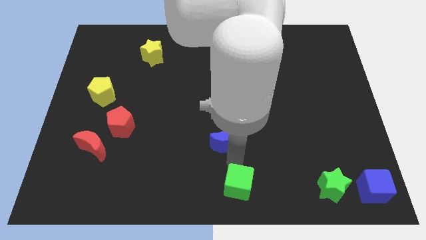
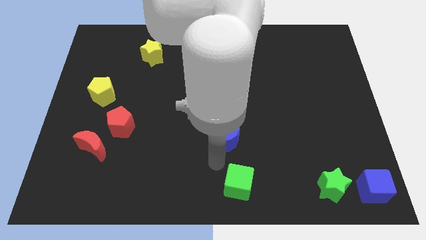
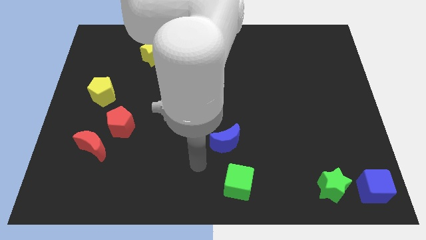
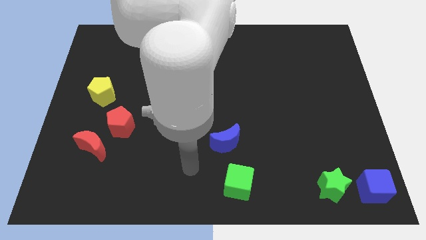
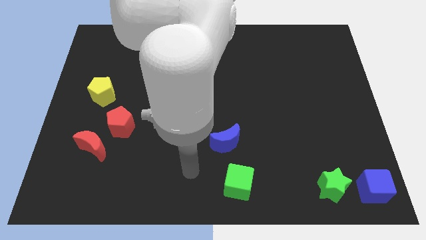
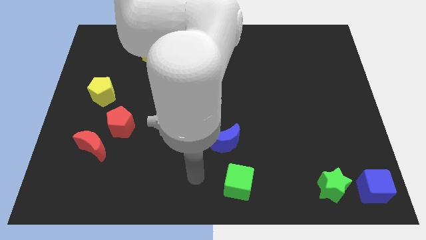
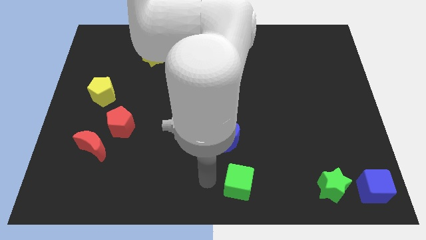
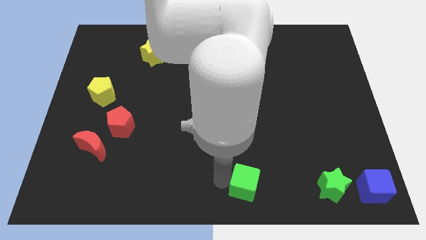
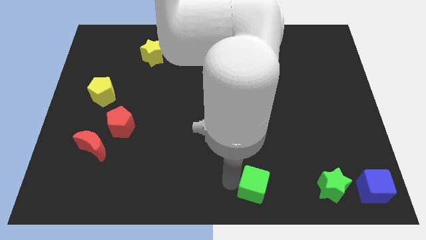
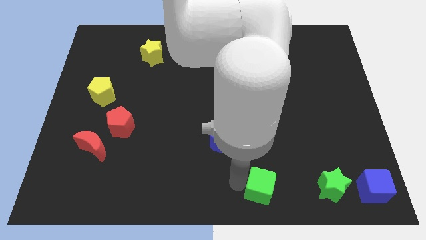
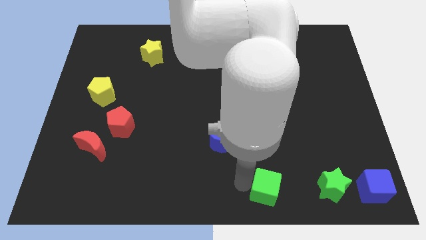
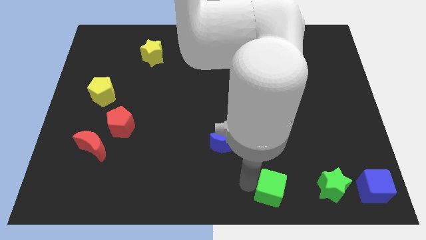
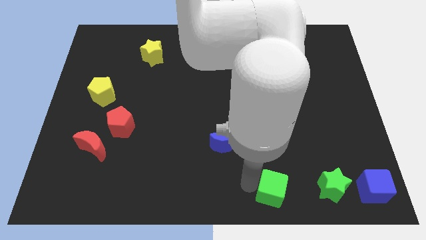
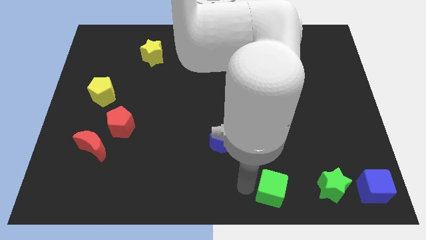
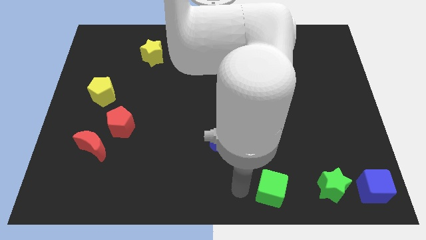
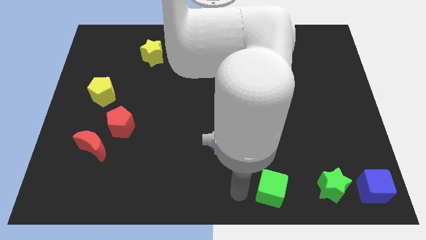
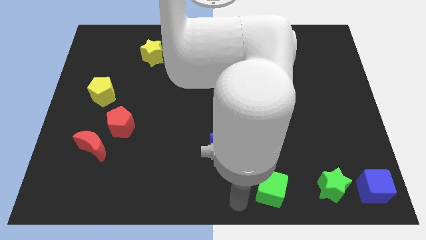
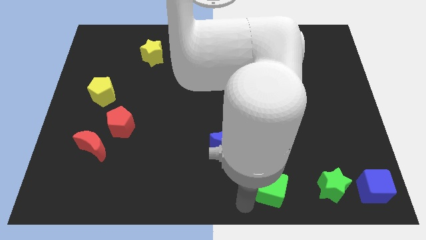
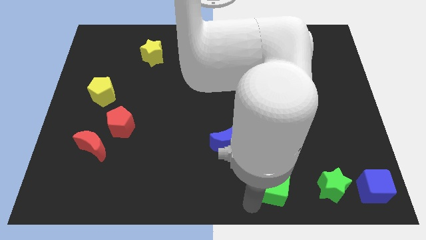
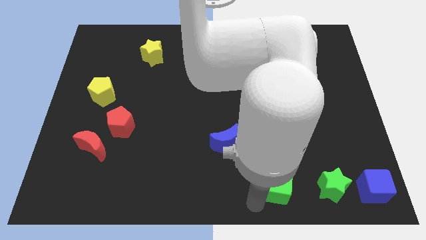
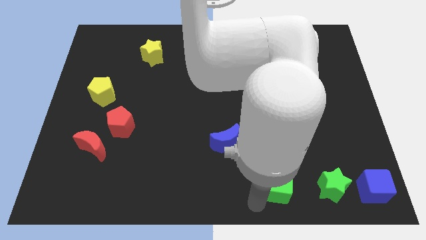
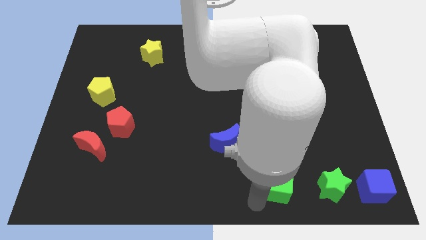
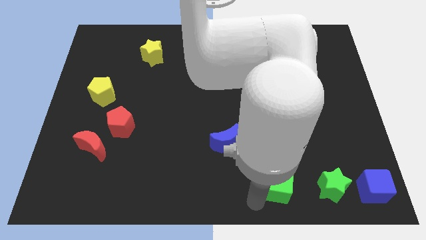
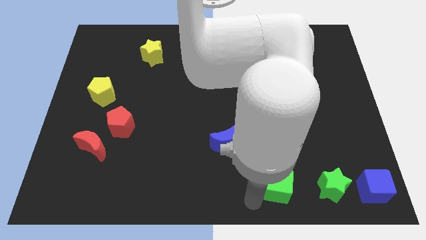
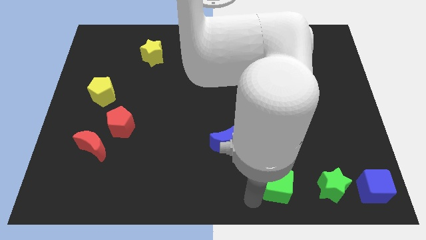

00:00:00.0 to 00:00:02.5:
slide the green cube towards the green star

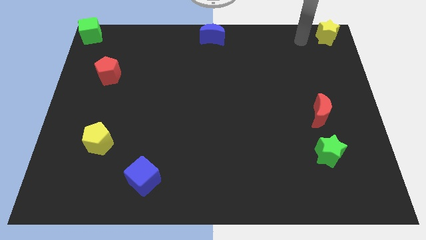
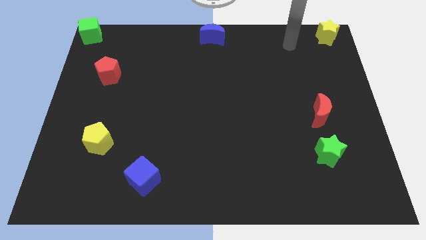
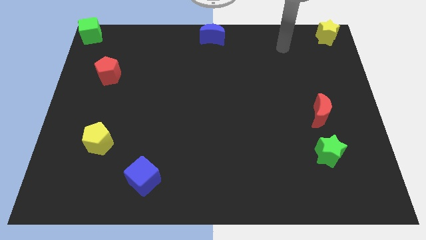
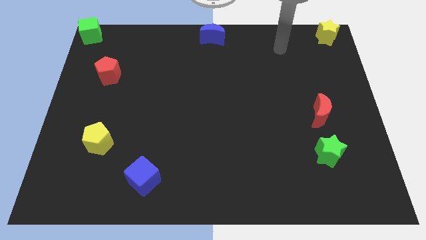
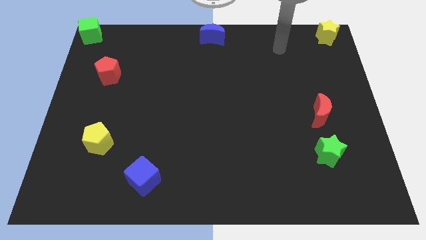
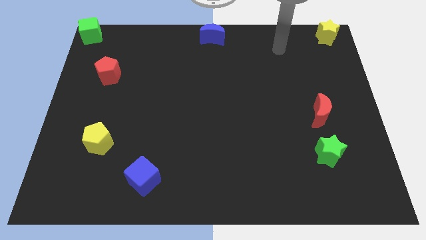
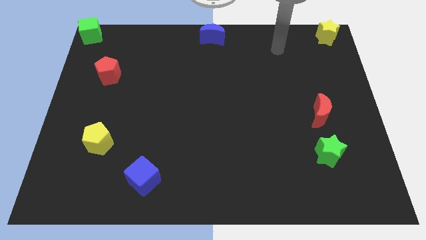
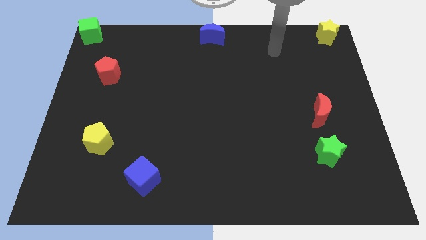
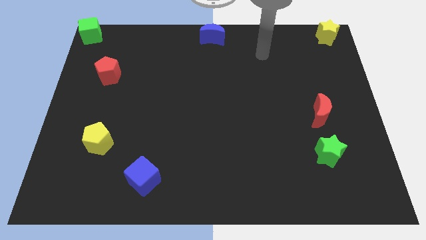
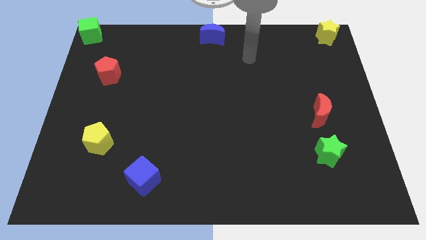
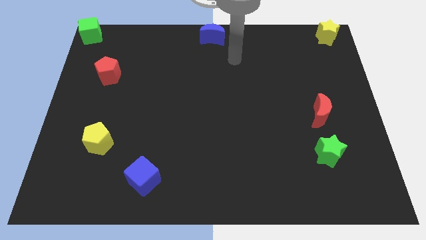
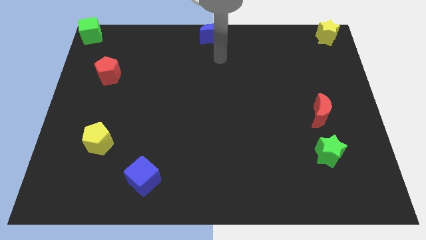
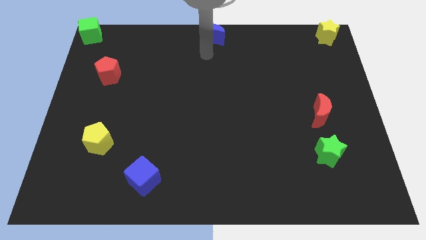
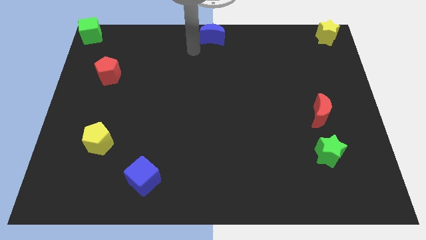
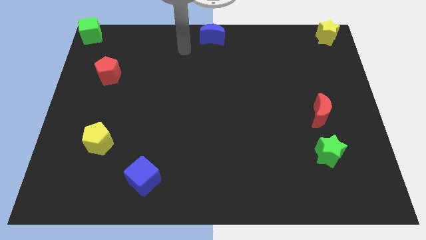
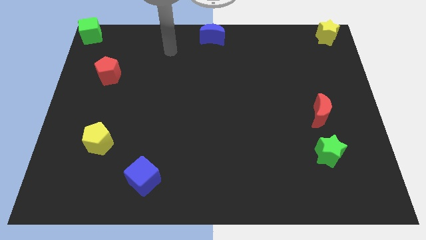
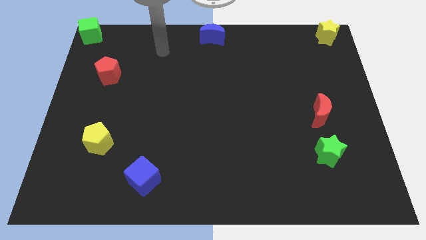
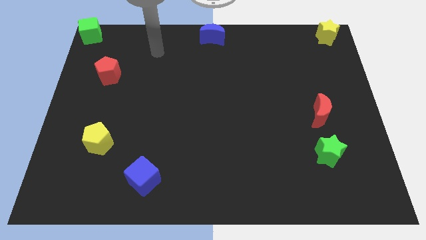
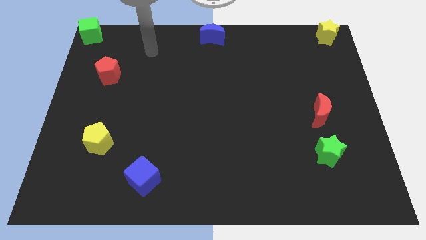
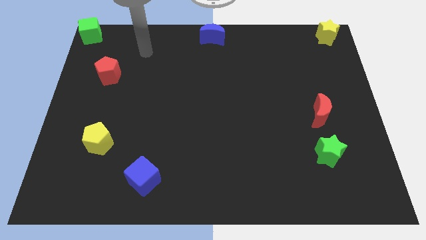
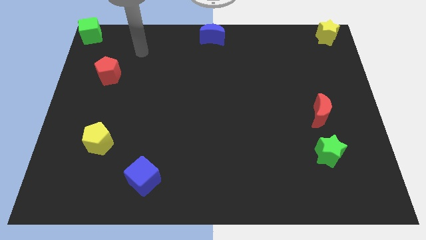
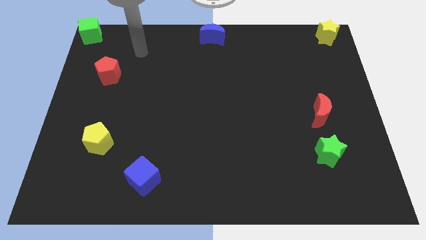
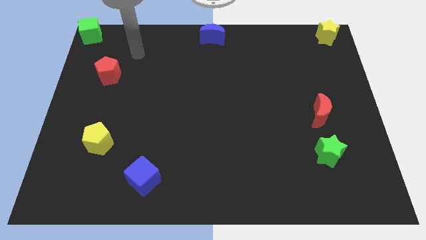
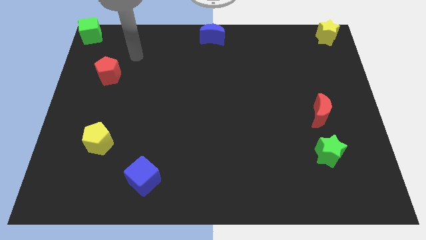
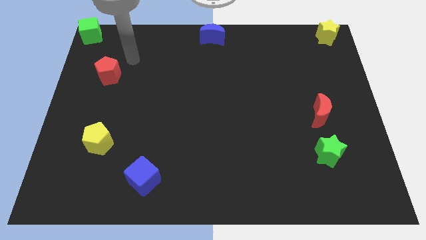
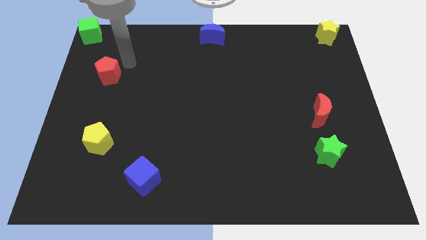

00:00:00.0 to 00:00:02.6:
place your arm near red pentagon

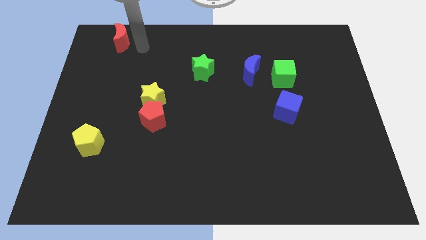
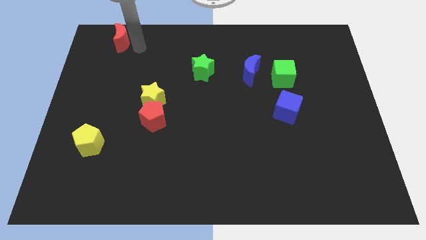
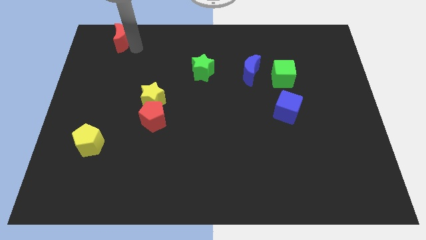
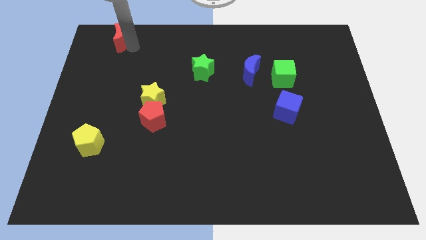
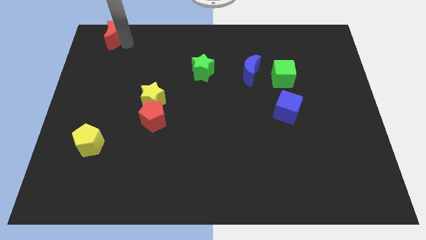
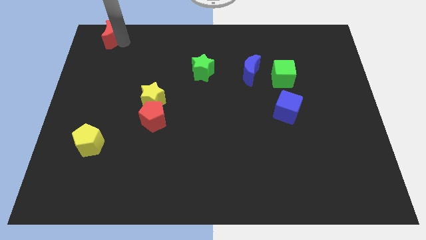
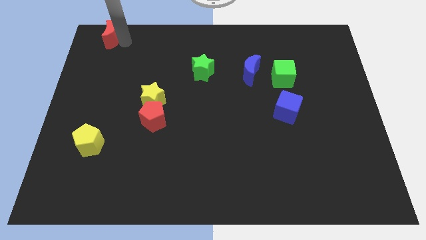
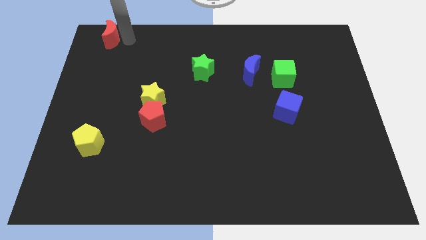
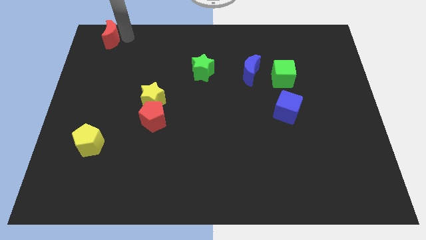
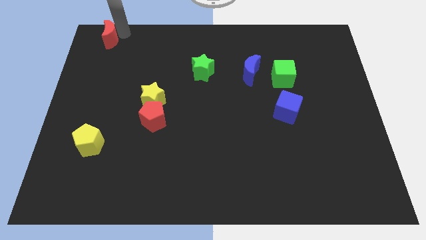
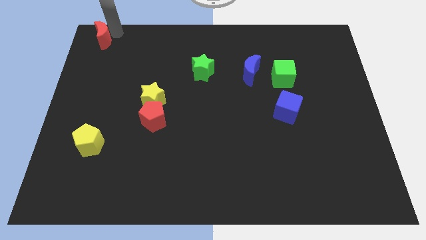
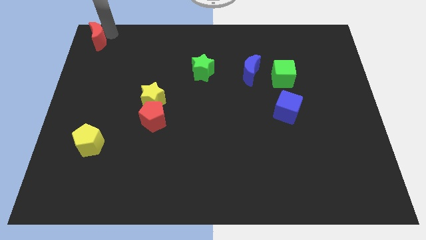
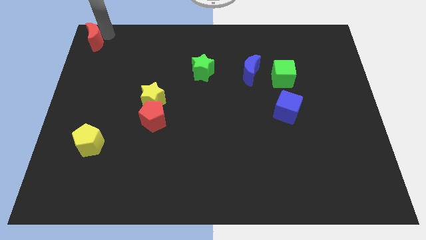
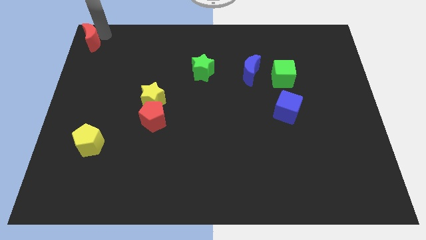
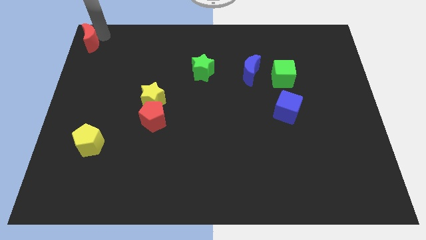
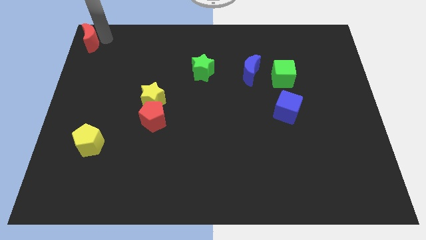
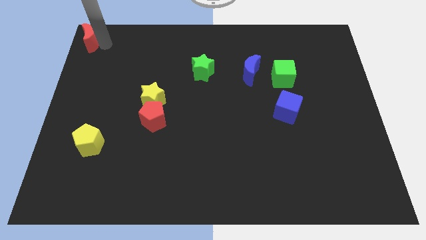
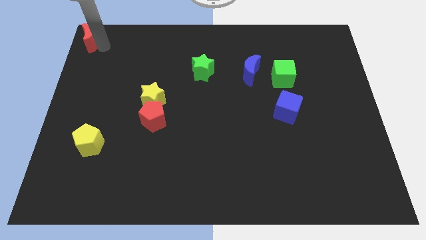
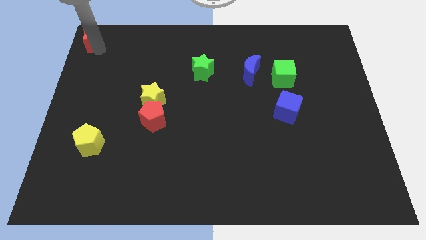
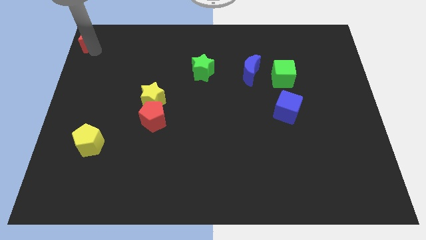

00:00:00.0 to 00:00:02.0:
move the red crescent towards the top left corner of the board

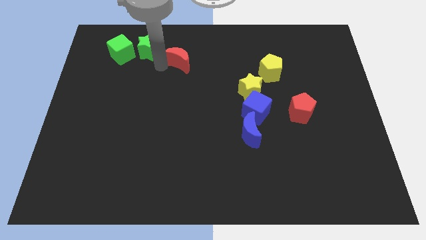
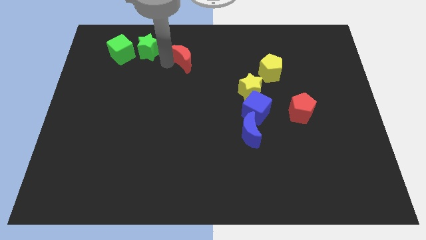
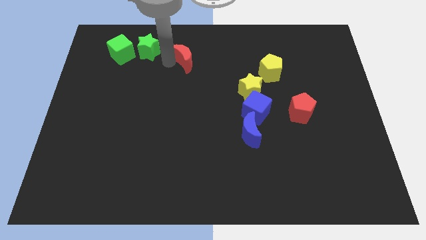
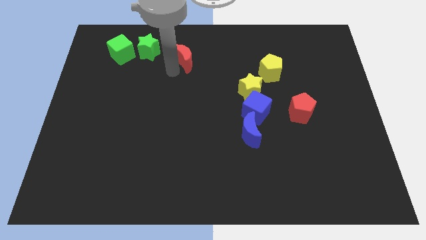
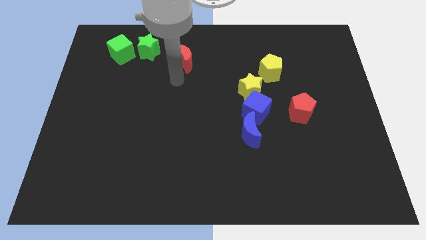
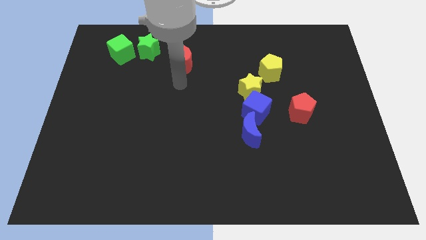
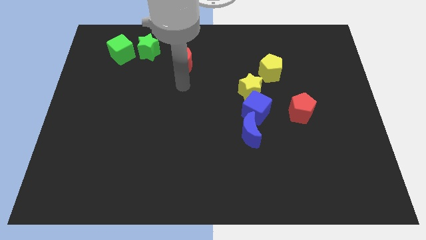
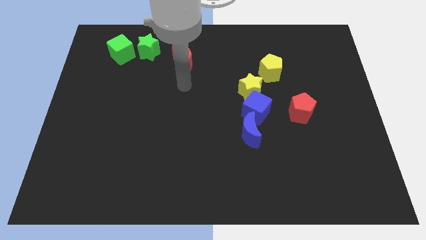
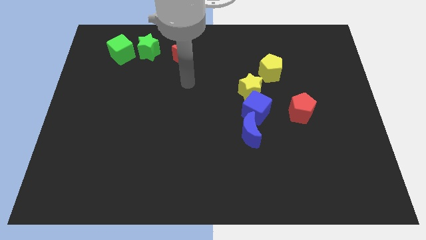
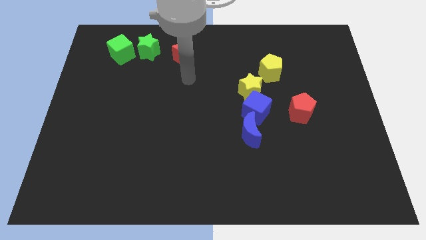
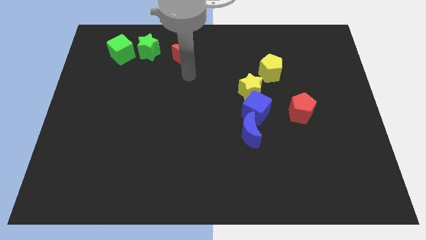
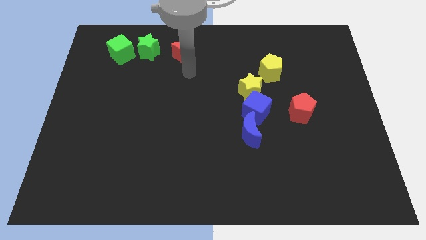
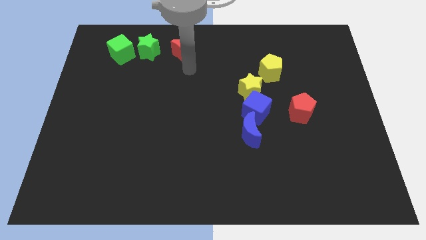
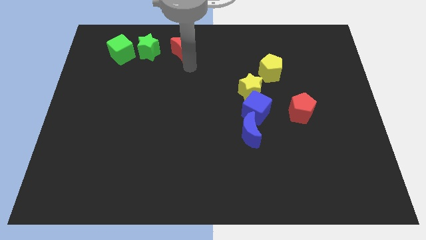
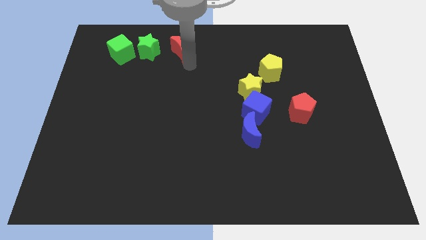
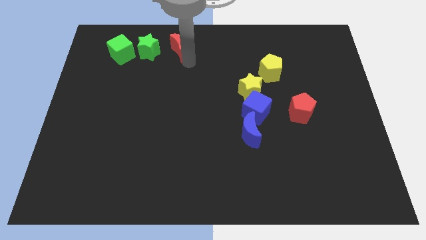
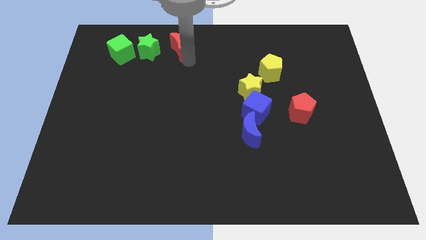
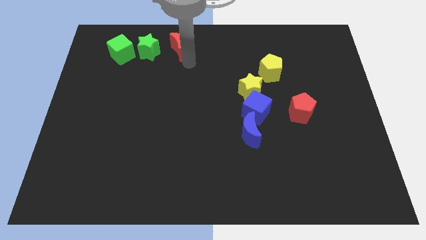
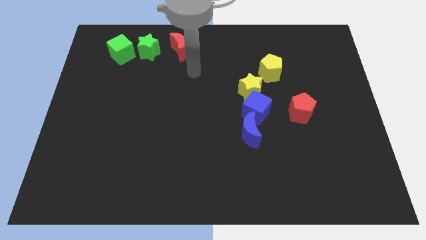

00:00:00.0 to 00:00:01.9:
move the red crescent to the right side of the green star
